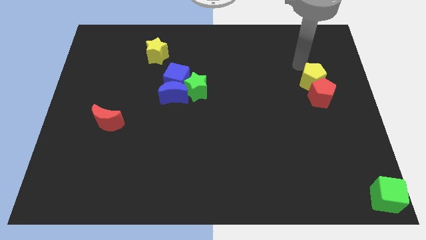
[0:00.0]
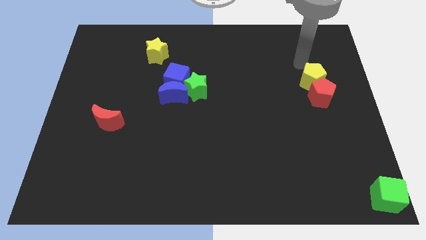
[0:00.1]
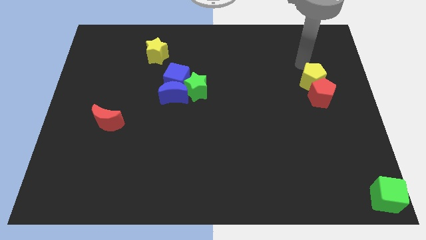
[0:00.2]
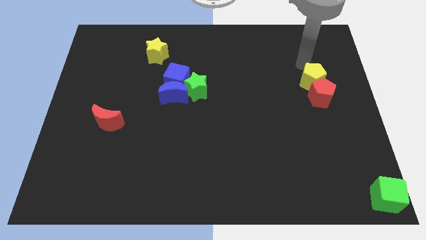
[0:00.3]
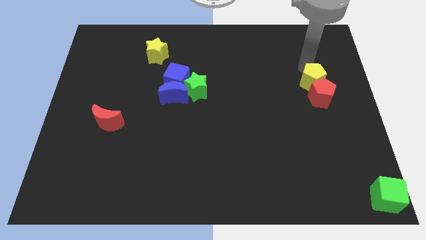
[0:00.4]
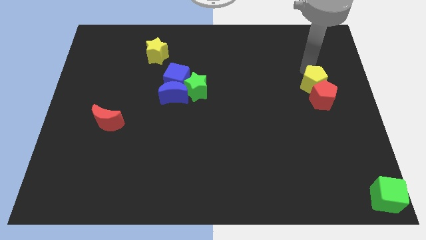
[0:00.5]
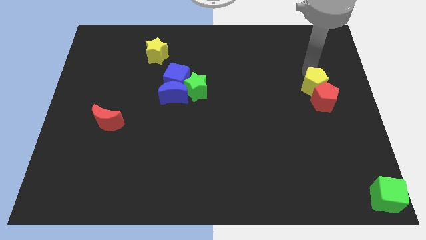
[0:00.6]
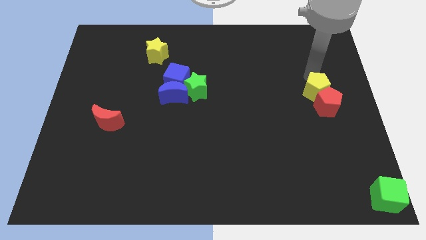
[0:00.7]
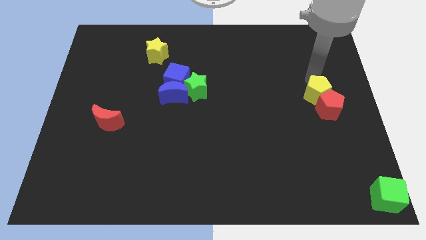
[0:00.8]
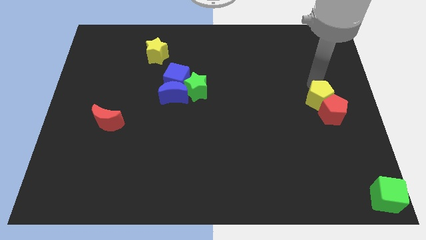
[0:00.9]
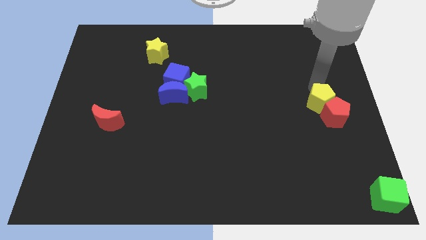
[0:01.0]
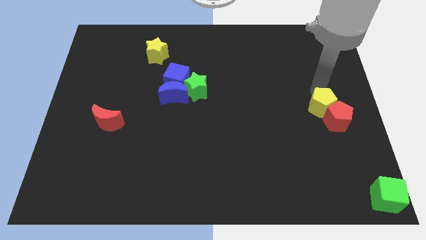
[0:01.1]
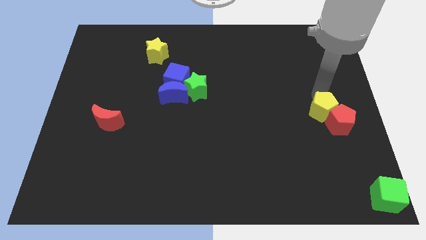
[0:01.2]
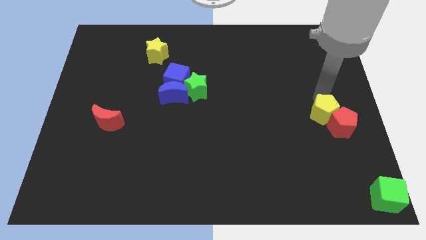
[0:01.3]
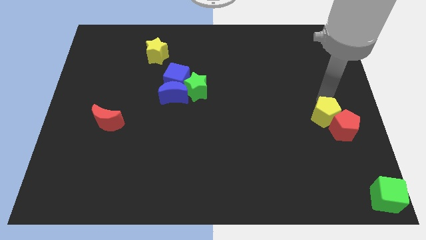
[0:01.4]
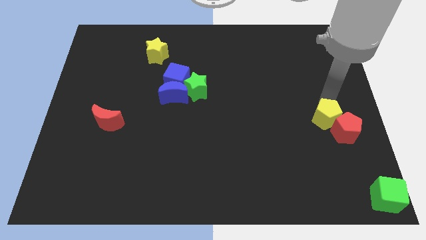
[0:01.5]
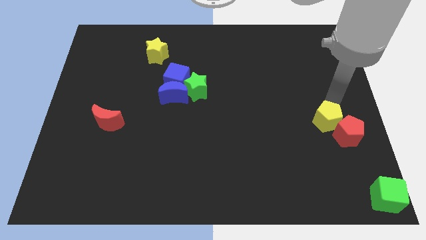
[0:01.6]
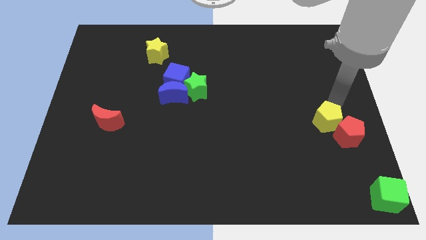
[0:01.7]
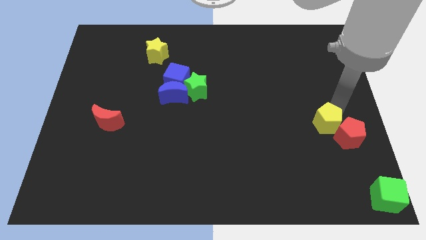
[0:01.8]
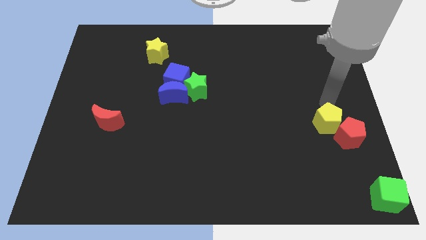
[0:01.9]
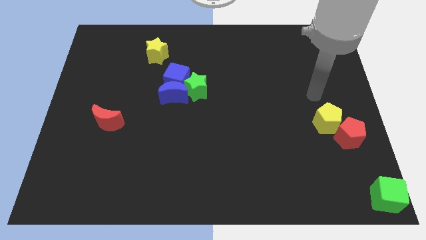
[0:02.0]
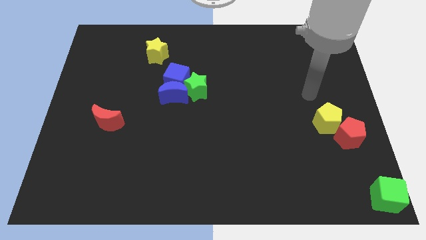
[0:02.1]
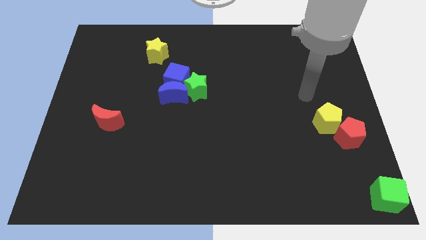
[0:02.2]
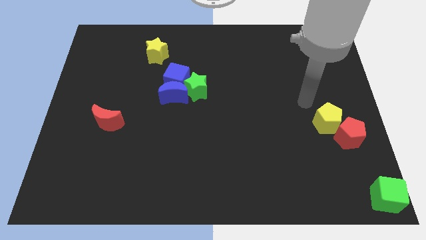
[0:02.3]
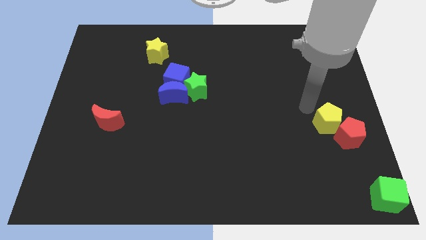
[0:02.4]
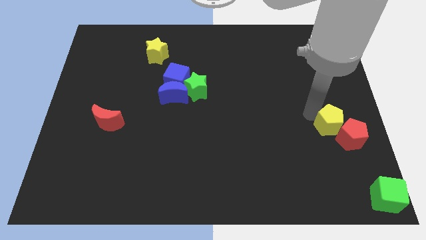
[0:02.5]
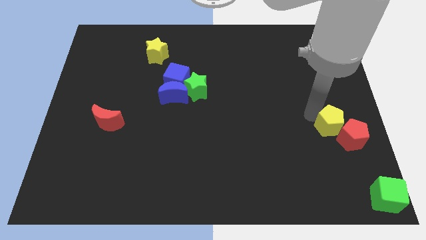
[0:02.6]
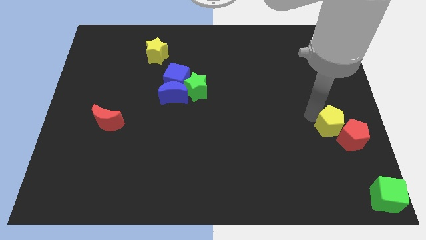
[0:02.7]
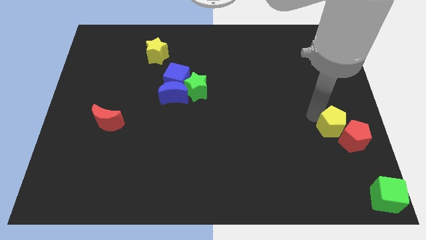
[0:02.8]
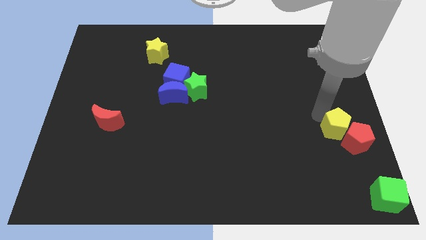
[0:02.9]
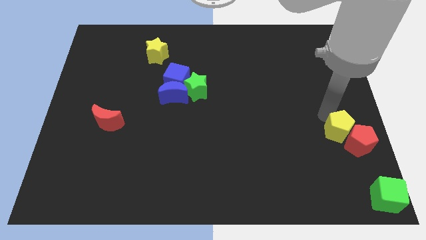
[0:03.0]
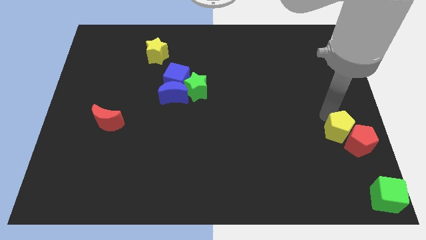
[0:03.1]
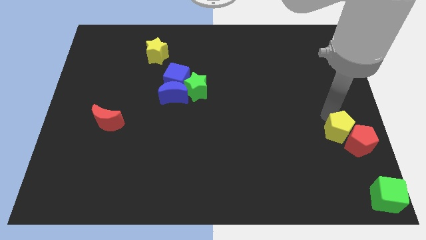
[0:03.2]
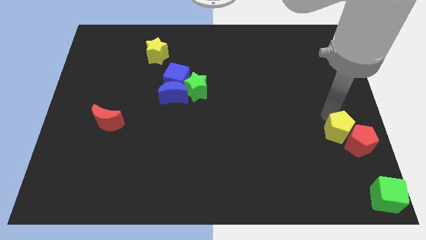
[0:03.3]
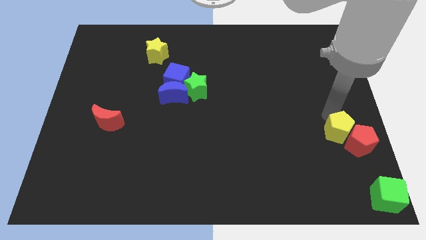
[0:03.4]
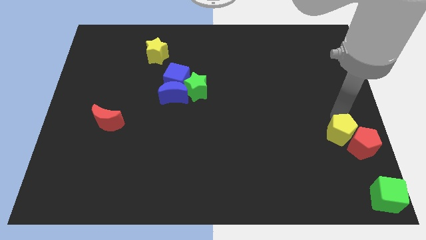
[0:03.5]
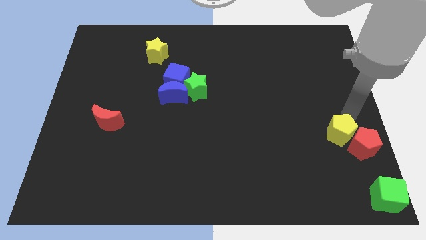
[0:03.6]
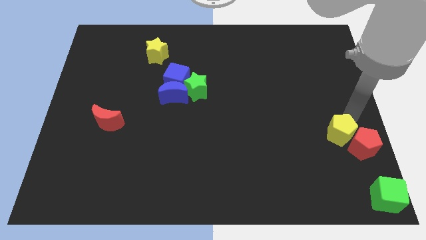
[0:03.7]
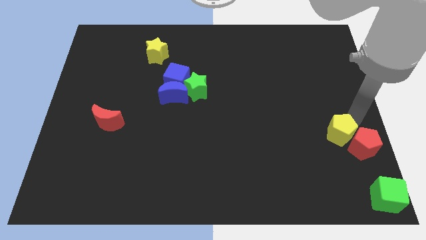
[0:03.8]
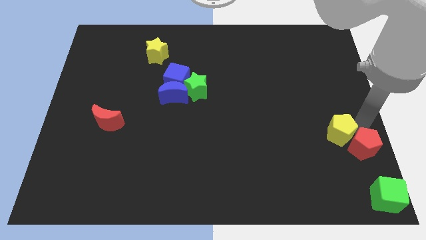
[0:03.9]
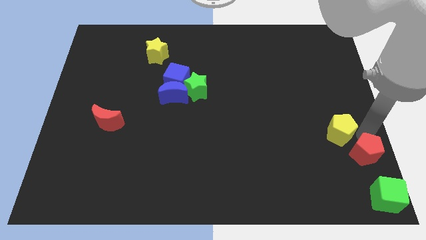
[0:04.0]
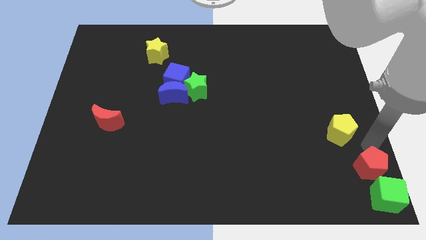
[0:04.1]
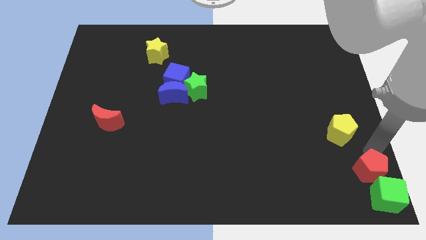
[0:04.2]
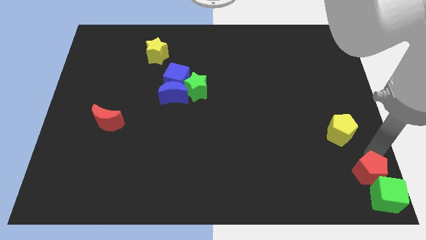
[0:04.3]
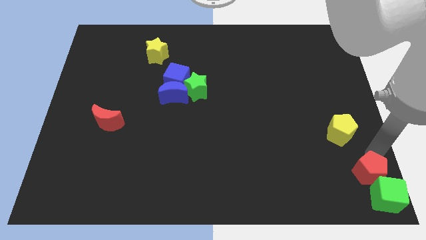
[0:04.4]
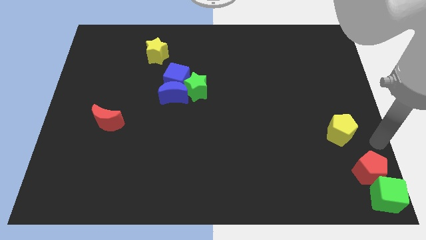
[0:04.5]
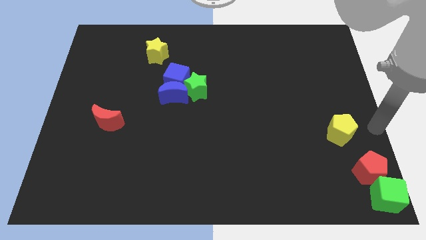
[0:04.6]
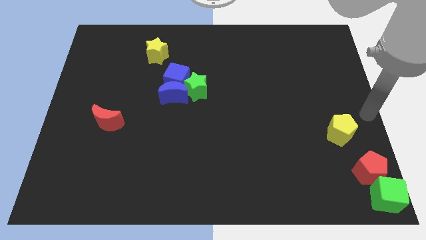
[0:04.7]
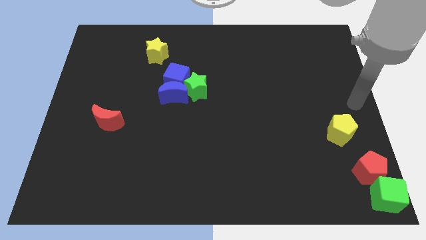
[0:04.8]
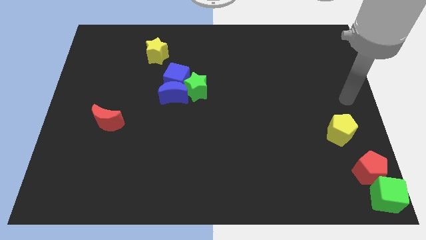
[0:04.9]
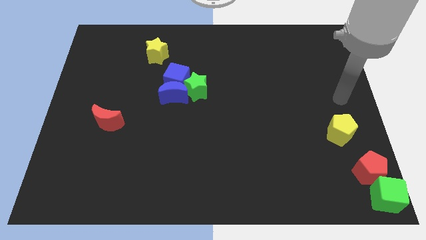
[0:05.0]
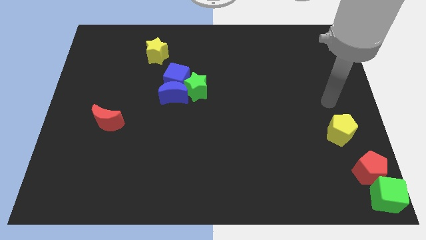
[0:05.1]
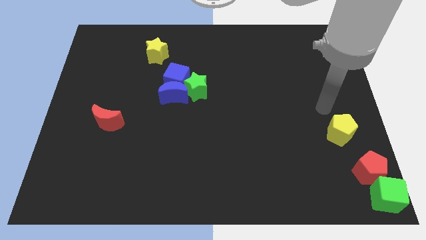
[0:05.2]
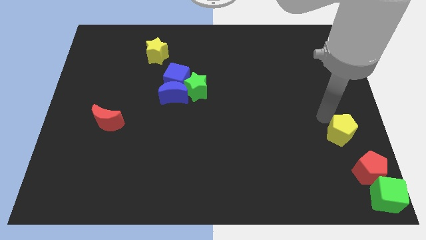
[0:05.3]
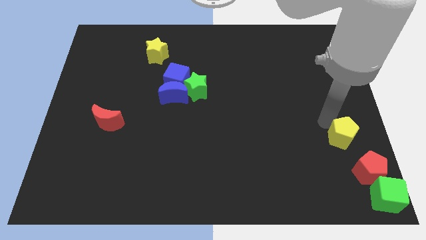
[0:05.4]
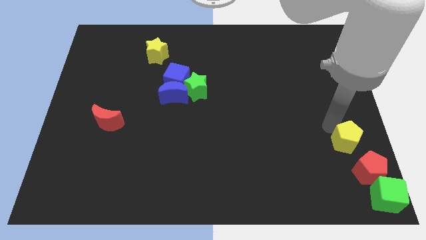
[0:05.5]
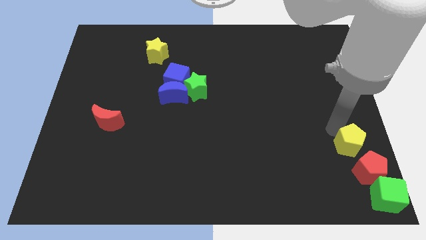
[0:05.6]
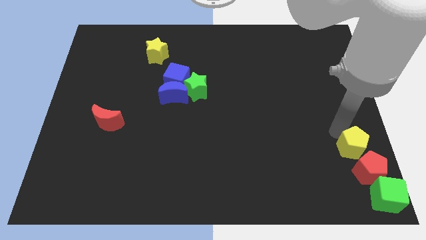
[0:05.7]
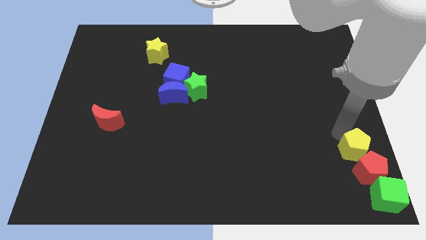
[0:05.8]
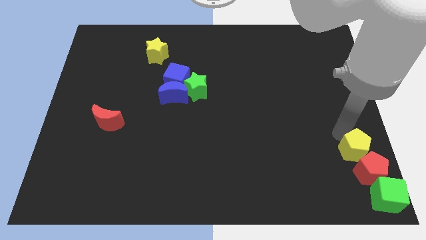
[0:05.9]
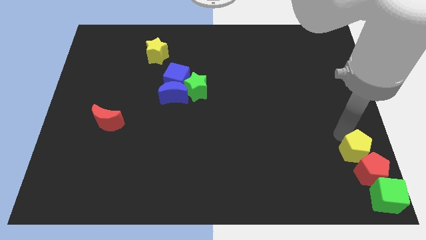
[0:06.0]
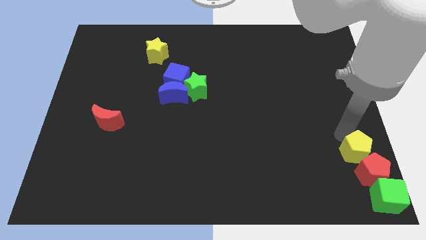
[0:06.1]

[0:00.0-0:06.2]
push the both yellow pentagon and red pentagon towards the green cube

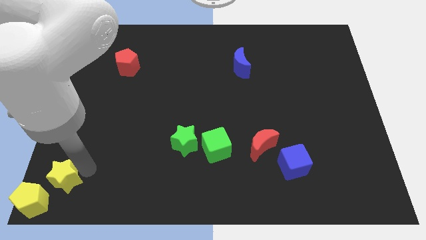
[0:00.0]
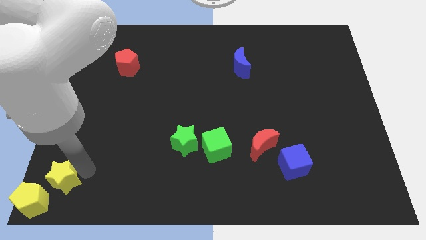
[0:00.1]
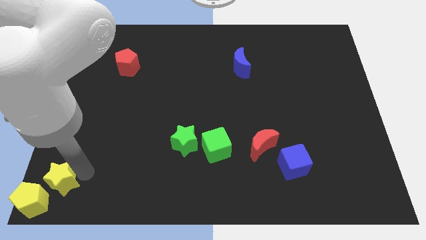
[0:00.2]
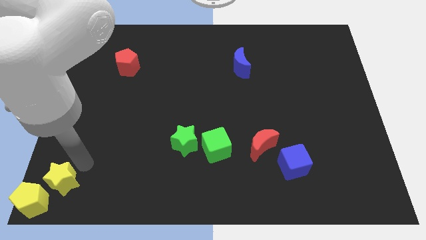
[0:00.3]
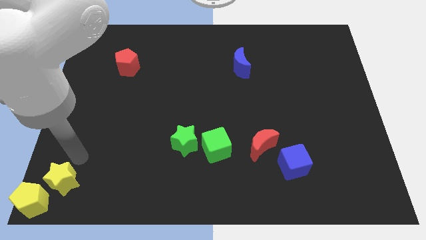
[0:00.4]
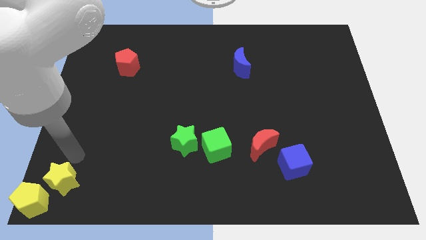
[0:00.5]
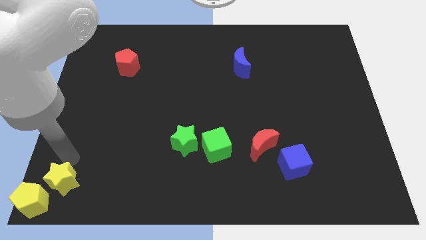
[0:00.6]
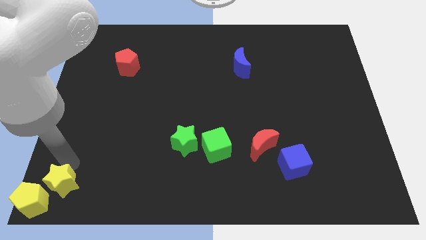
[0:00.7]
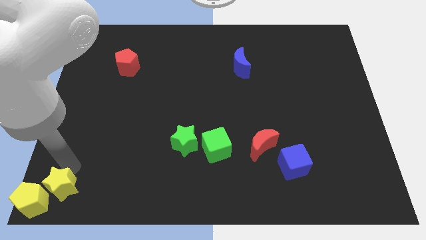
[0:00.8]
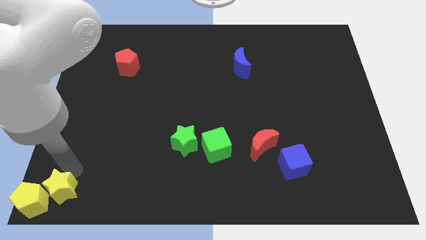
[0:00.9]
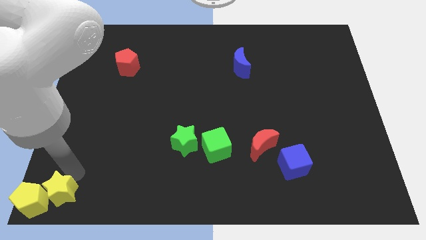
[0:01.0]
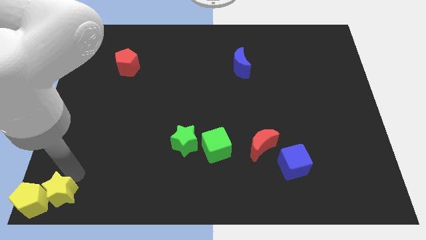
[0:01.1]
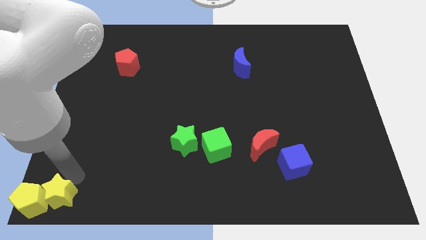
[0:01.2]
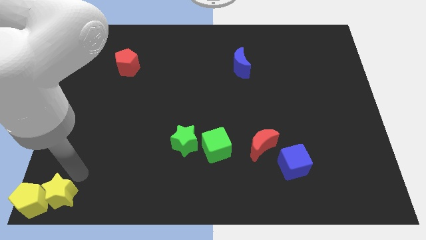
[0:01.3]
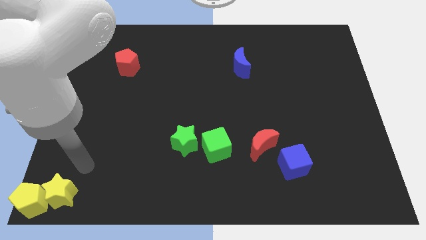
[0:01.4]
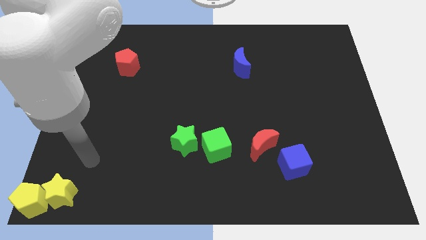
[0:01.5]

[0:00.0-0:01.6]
move the green star slightly to the right of the yellow pentagon

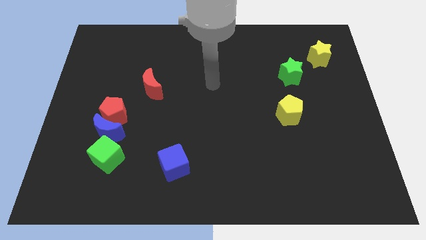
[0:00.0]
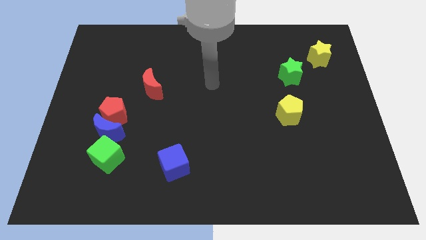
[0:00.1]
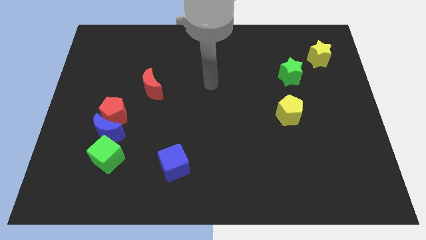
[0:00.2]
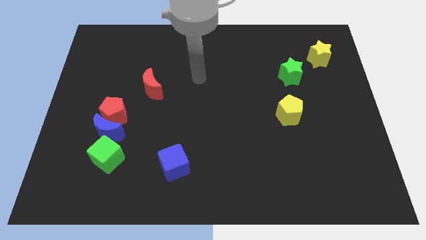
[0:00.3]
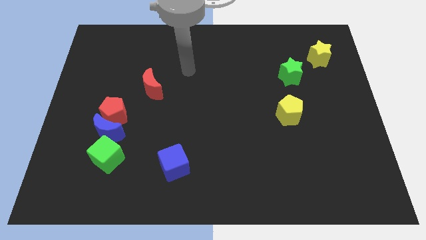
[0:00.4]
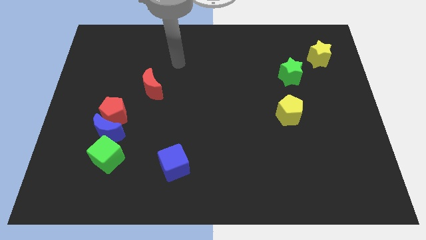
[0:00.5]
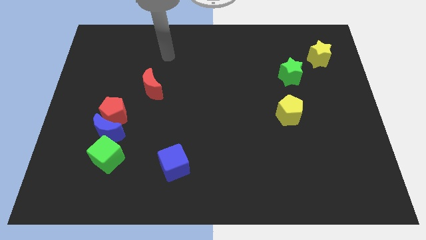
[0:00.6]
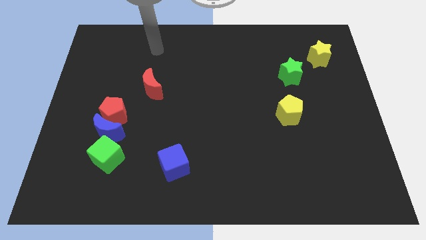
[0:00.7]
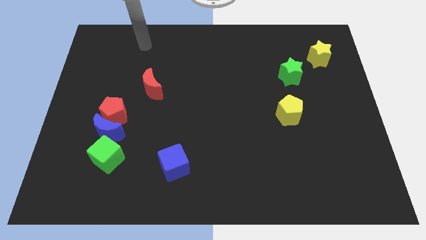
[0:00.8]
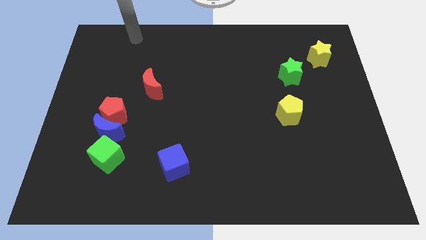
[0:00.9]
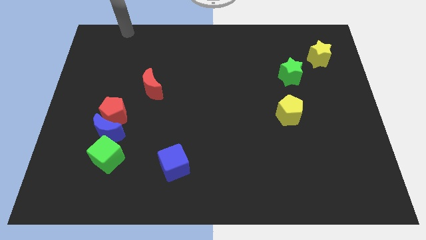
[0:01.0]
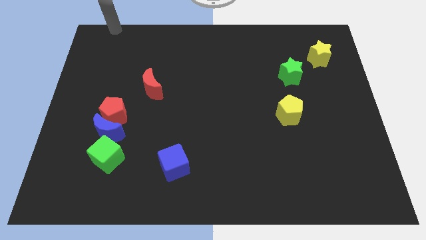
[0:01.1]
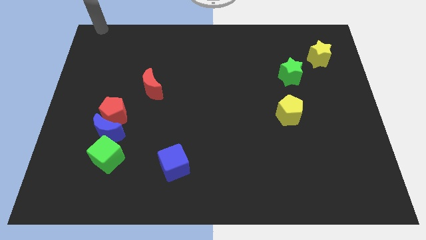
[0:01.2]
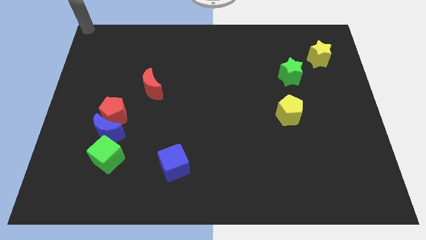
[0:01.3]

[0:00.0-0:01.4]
slide your arm to the top left corner
